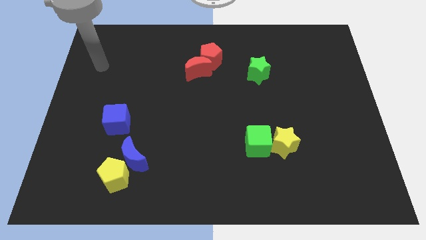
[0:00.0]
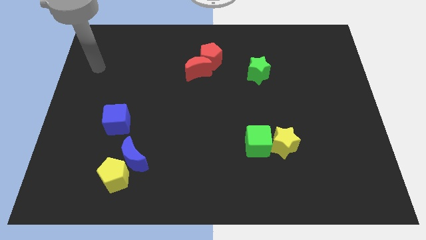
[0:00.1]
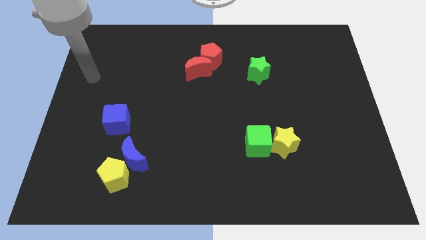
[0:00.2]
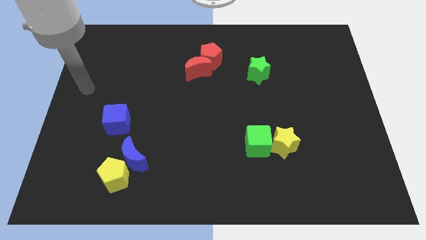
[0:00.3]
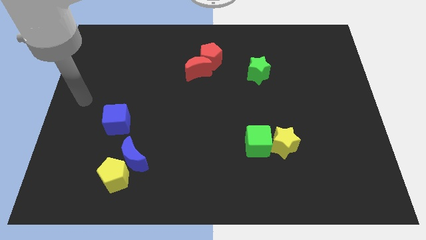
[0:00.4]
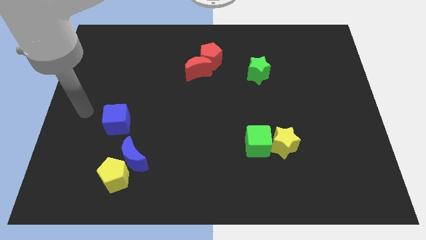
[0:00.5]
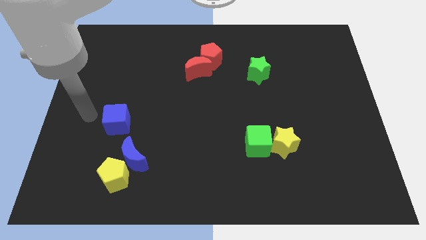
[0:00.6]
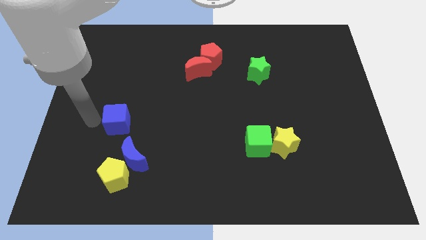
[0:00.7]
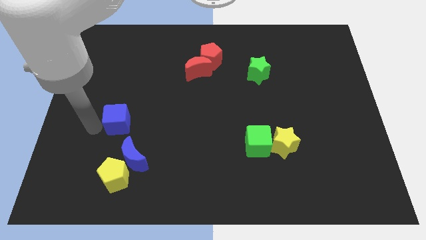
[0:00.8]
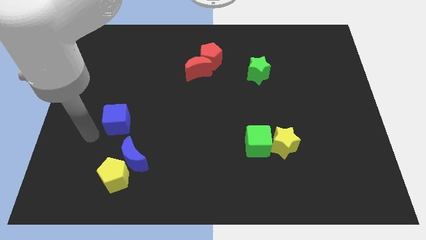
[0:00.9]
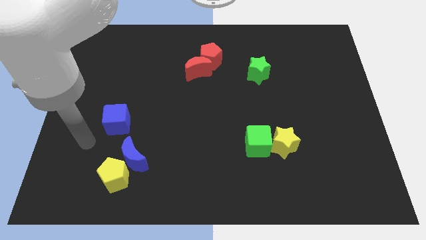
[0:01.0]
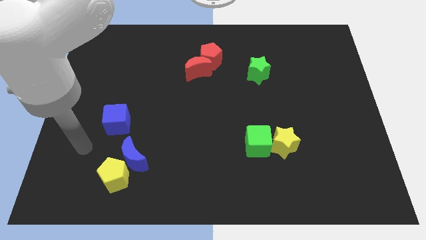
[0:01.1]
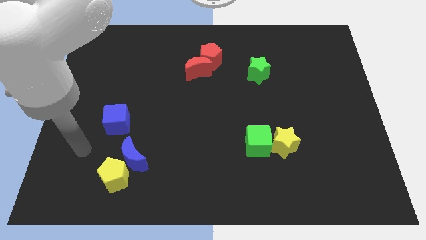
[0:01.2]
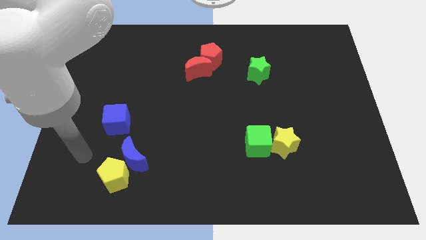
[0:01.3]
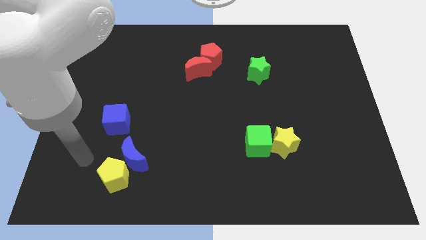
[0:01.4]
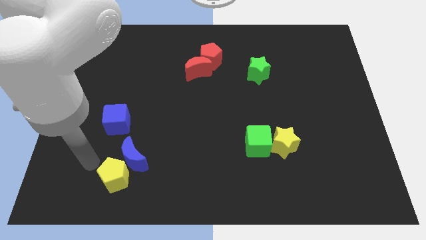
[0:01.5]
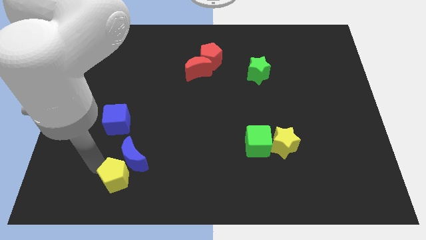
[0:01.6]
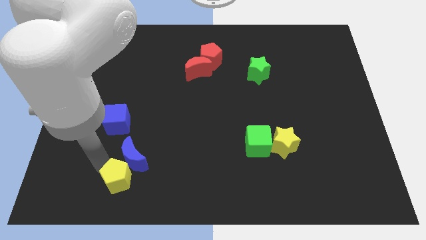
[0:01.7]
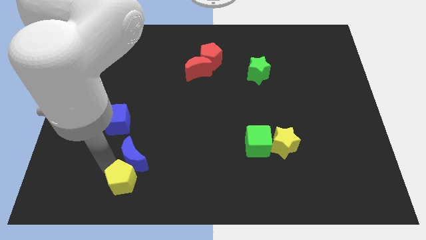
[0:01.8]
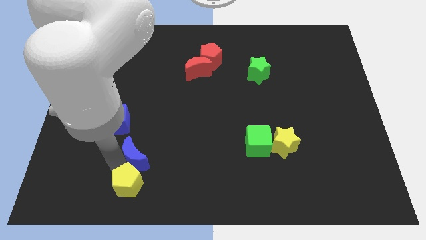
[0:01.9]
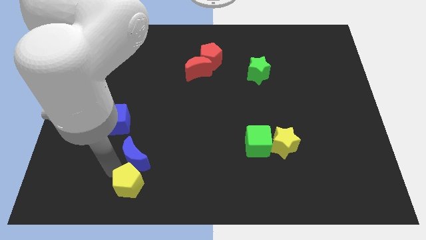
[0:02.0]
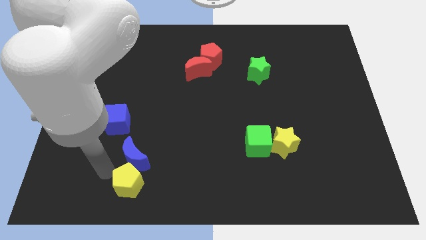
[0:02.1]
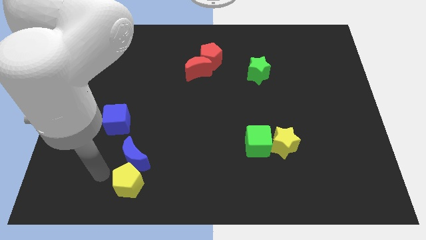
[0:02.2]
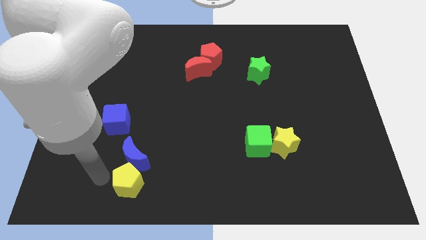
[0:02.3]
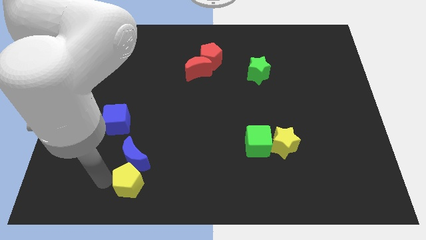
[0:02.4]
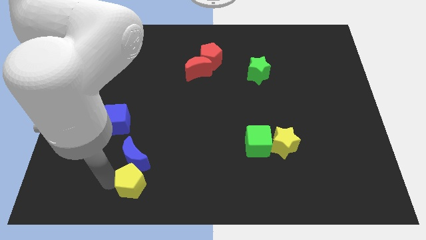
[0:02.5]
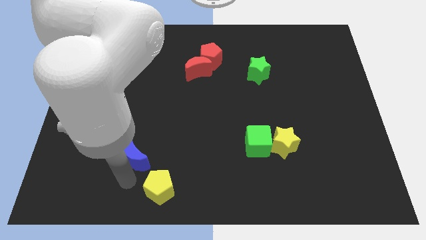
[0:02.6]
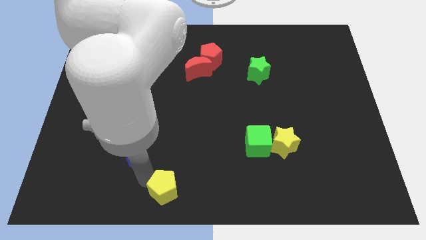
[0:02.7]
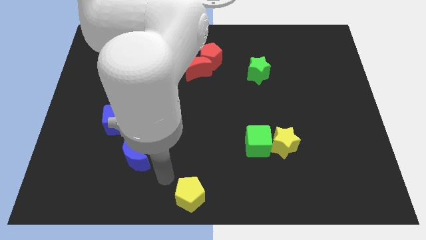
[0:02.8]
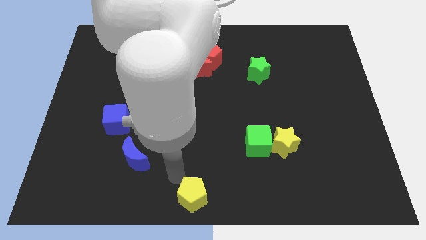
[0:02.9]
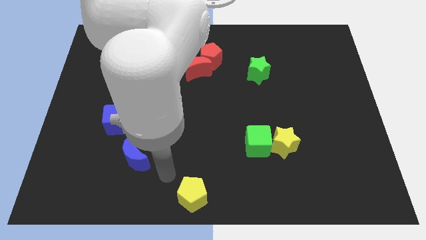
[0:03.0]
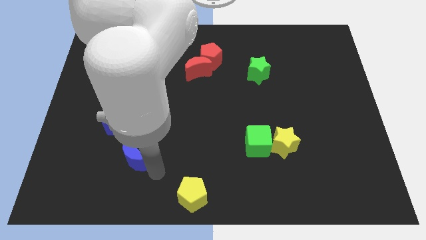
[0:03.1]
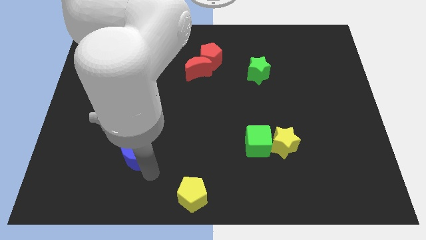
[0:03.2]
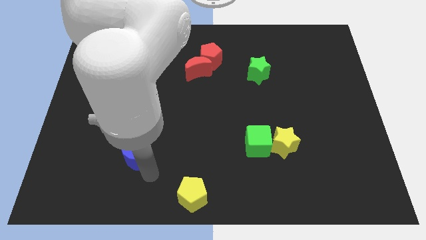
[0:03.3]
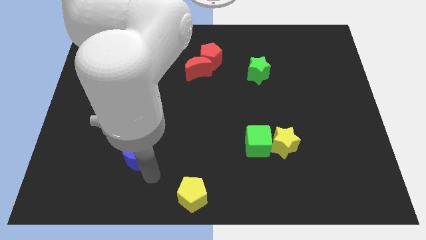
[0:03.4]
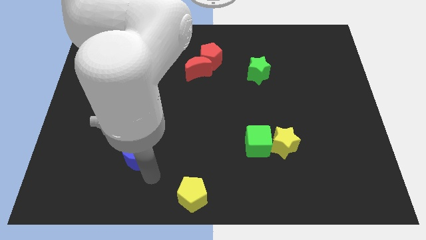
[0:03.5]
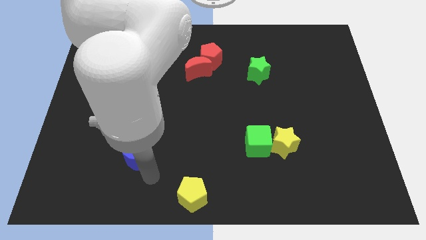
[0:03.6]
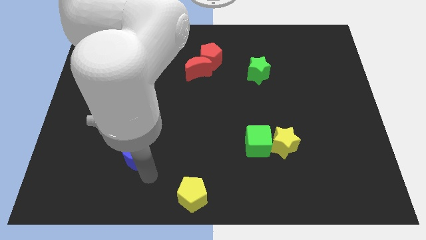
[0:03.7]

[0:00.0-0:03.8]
place the yellow pentagon below the red moon

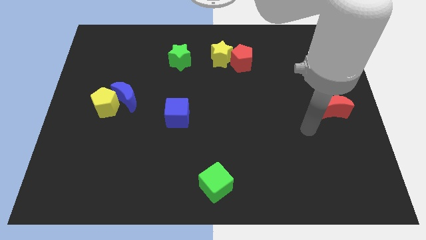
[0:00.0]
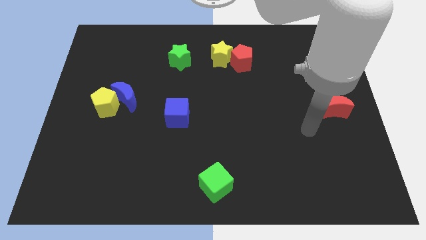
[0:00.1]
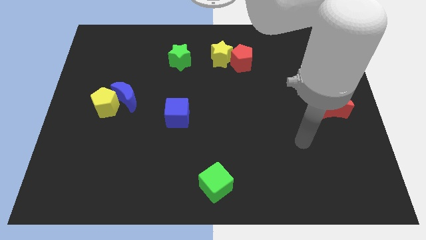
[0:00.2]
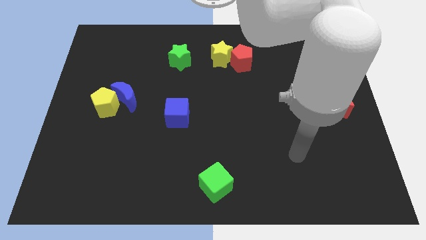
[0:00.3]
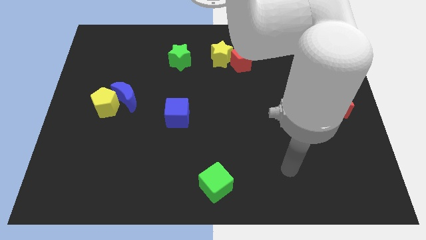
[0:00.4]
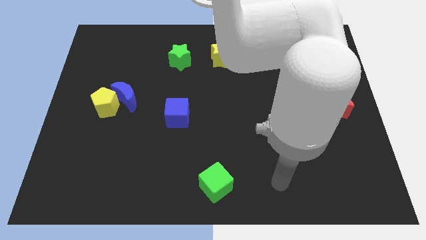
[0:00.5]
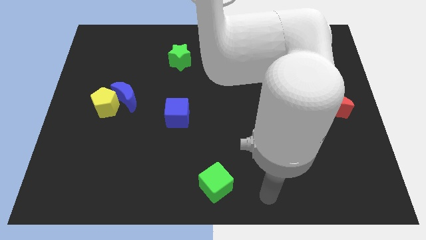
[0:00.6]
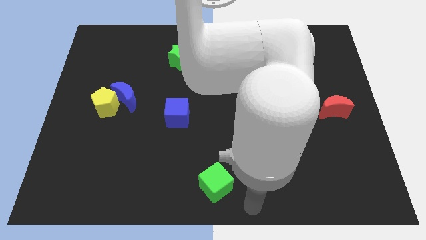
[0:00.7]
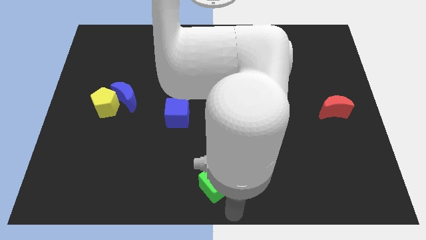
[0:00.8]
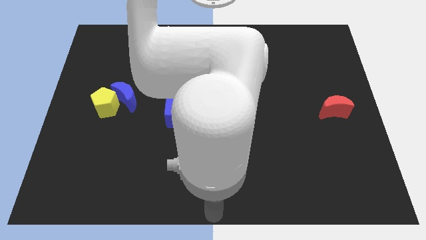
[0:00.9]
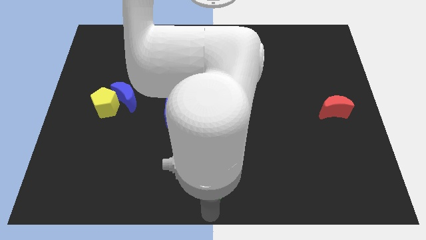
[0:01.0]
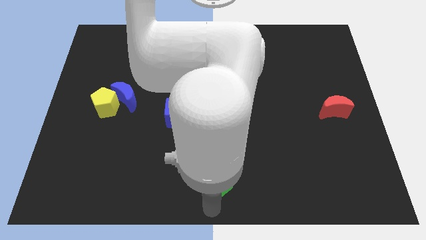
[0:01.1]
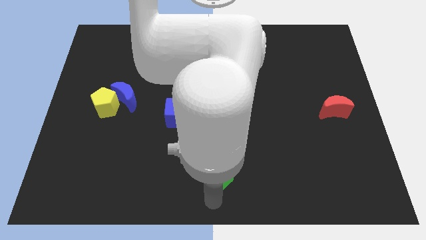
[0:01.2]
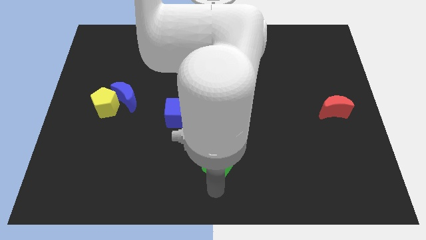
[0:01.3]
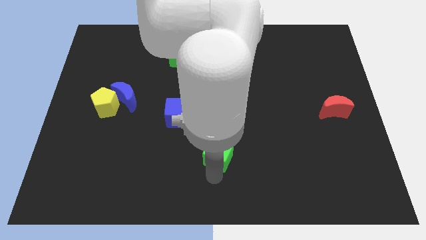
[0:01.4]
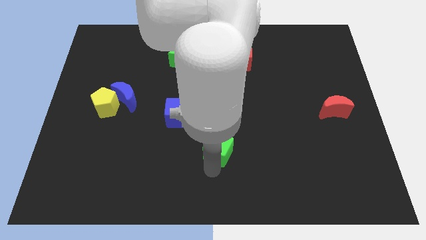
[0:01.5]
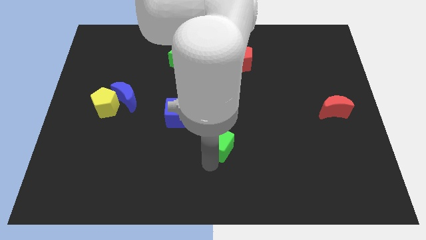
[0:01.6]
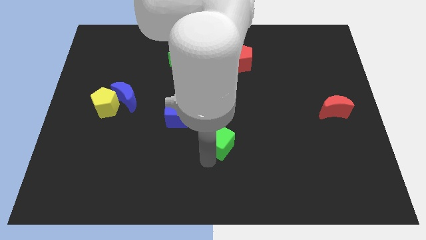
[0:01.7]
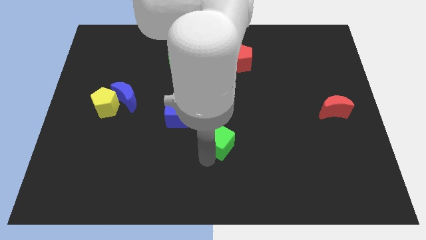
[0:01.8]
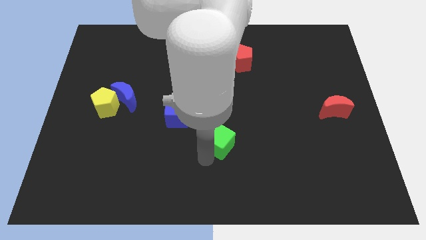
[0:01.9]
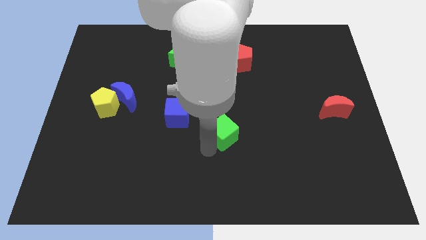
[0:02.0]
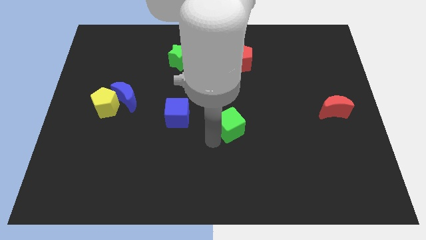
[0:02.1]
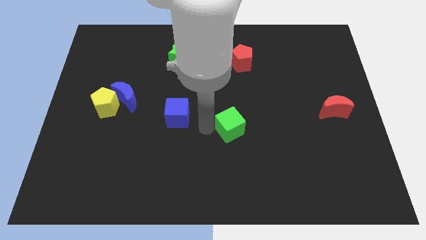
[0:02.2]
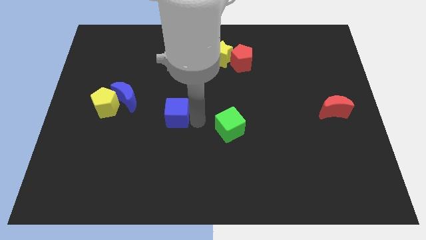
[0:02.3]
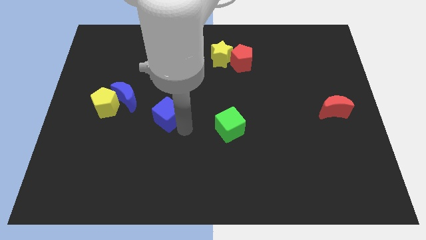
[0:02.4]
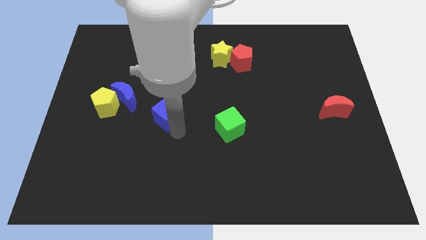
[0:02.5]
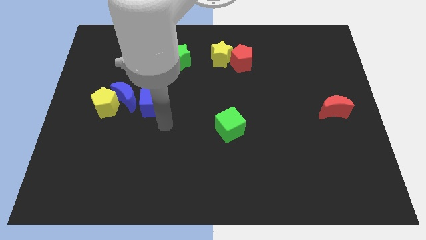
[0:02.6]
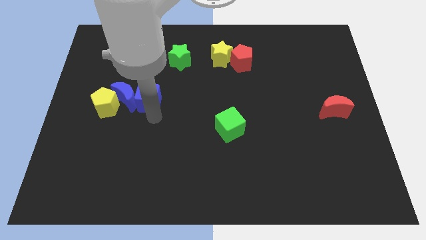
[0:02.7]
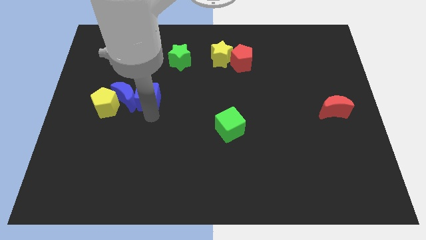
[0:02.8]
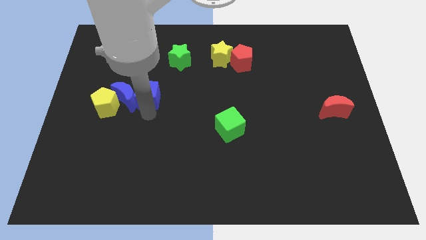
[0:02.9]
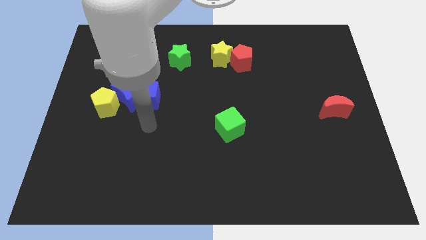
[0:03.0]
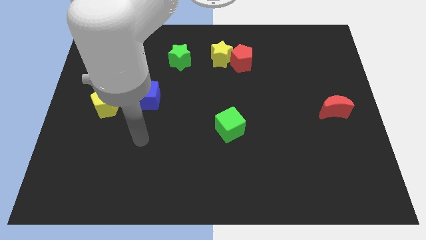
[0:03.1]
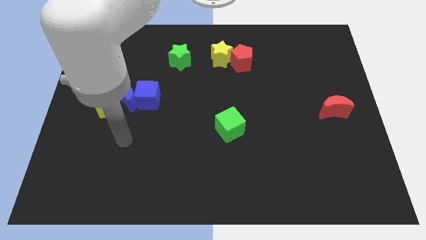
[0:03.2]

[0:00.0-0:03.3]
move the blue cube into the blue crescent

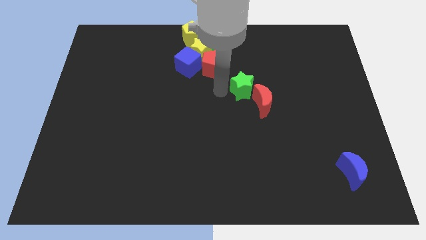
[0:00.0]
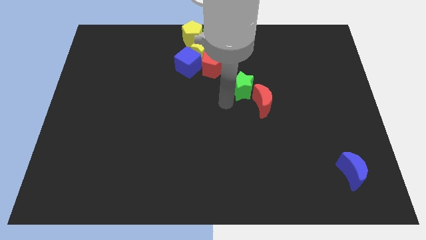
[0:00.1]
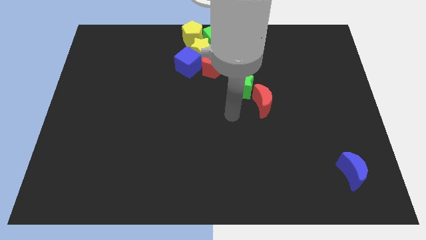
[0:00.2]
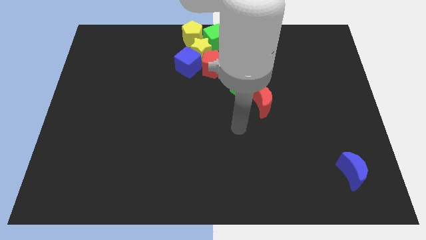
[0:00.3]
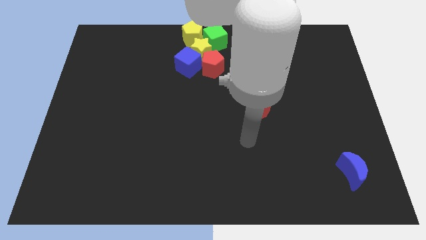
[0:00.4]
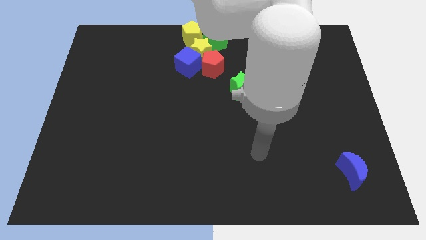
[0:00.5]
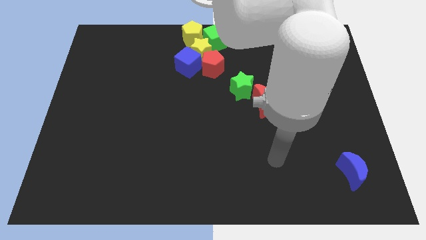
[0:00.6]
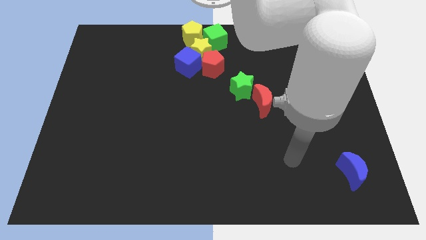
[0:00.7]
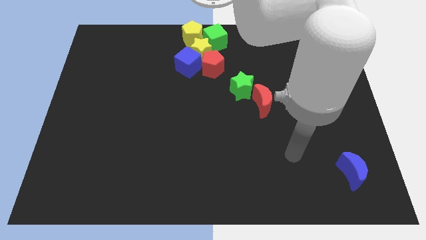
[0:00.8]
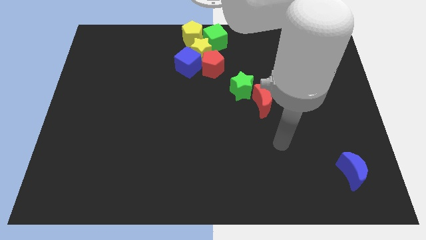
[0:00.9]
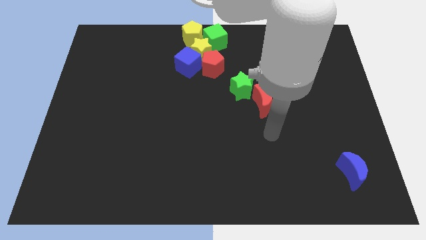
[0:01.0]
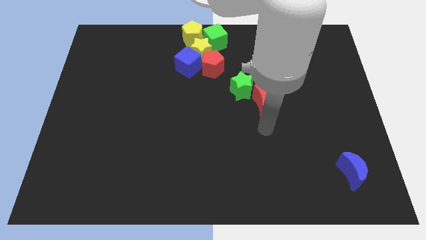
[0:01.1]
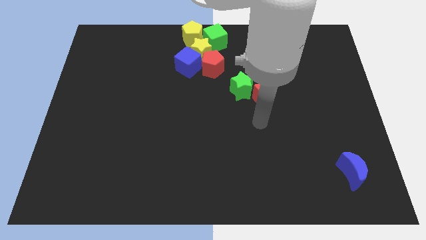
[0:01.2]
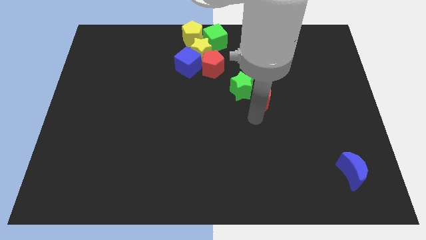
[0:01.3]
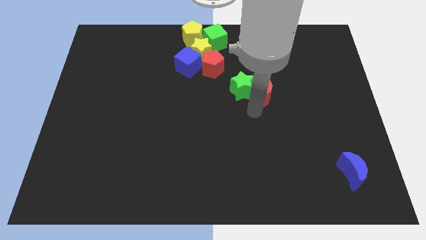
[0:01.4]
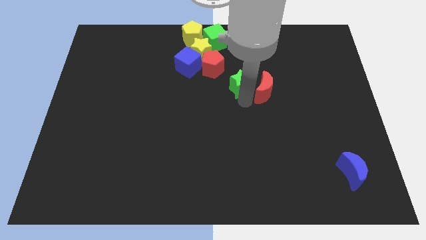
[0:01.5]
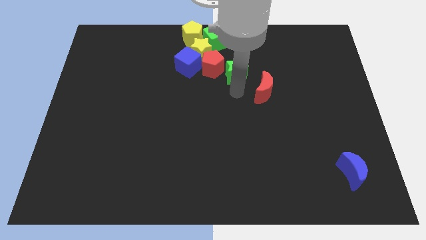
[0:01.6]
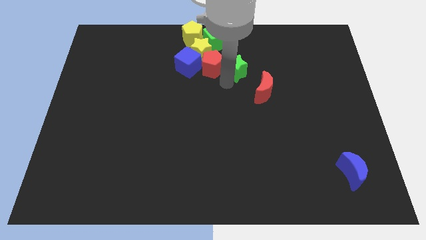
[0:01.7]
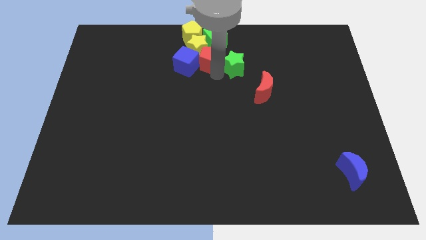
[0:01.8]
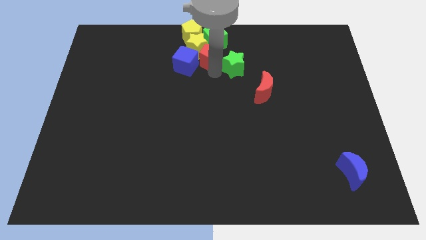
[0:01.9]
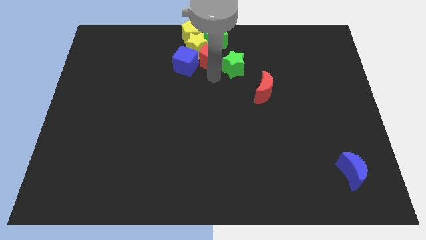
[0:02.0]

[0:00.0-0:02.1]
move the green star to the bottom right of the red pentagon
